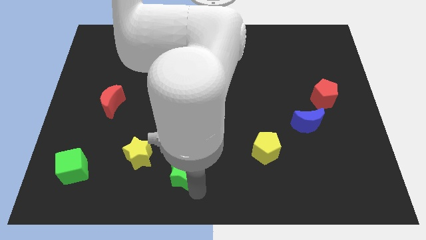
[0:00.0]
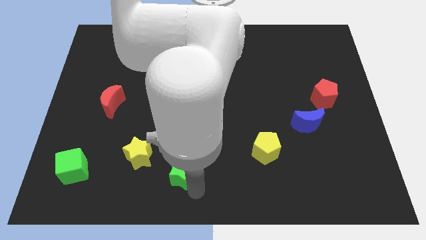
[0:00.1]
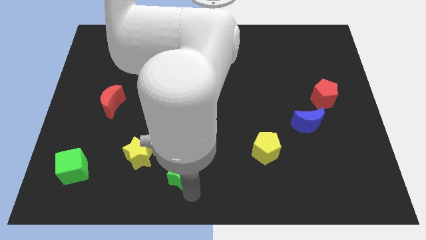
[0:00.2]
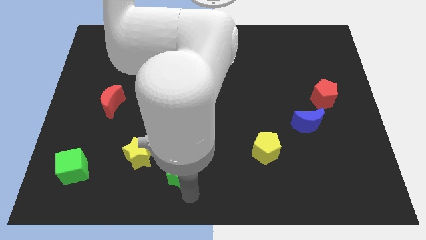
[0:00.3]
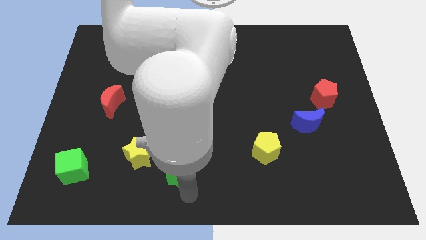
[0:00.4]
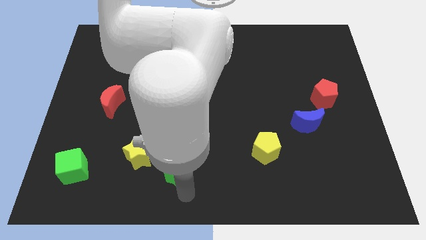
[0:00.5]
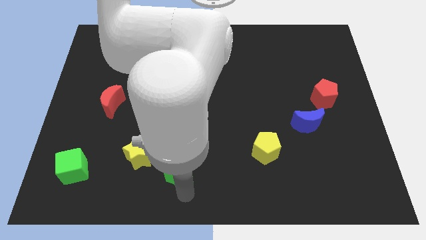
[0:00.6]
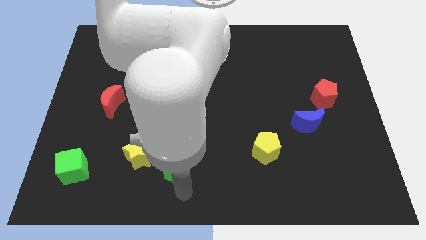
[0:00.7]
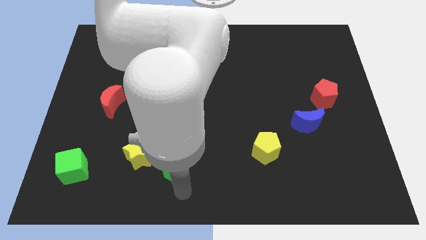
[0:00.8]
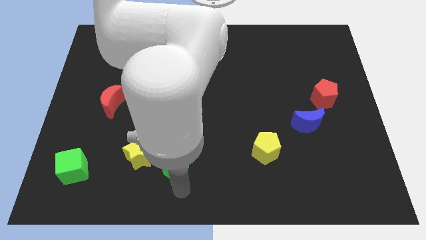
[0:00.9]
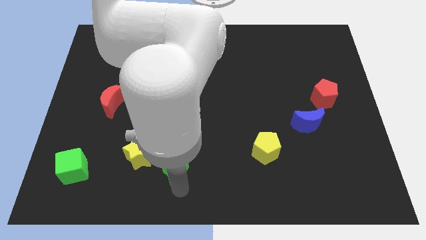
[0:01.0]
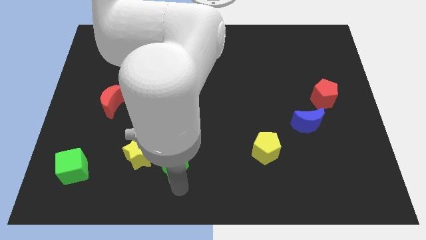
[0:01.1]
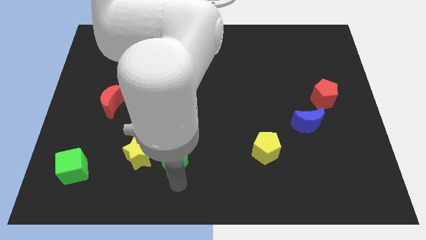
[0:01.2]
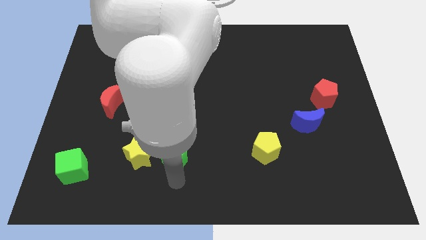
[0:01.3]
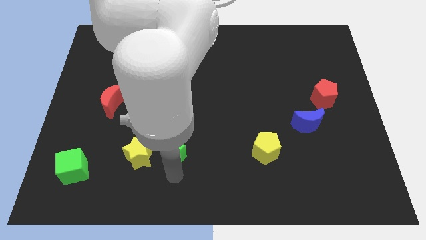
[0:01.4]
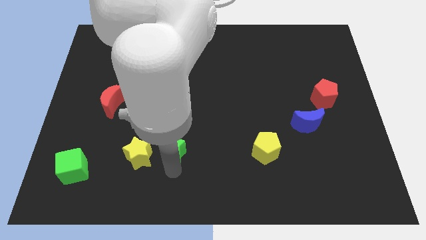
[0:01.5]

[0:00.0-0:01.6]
put the green star horizontal to the yellow star on the right side

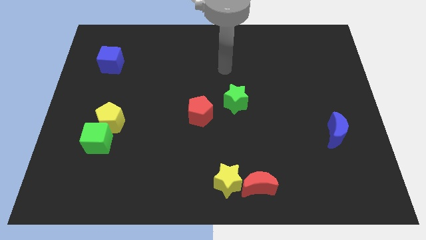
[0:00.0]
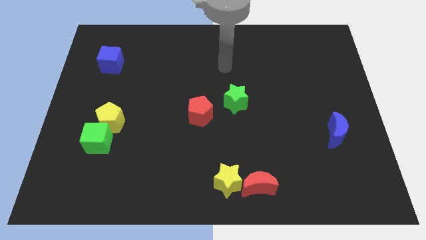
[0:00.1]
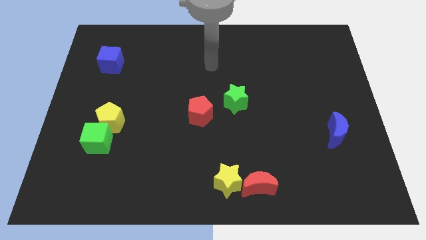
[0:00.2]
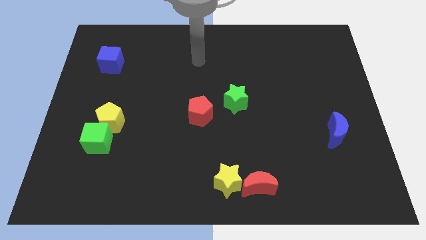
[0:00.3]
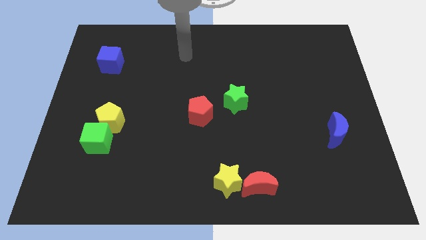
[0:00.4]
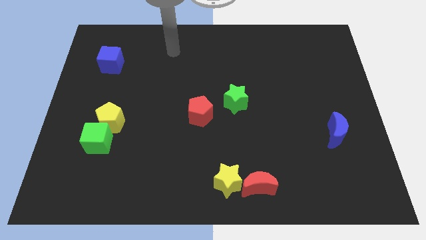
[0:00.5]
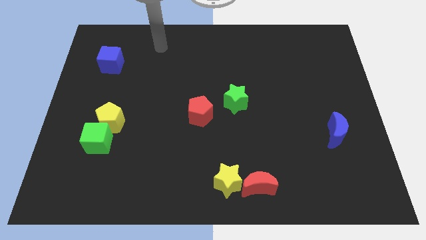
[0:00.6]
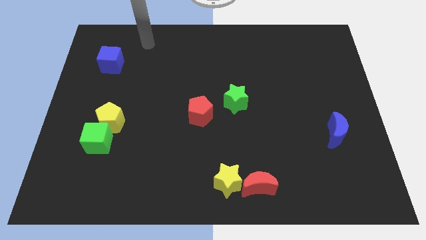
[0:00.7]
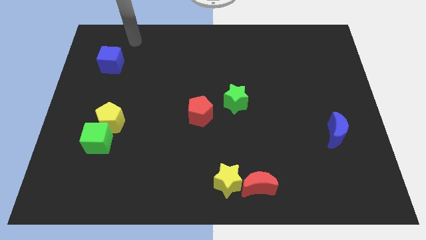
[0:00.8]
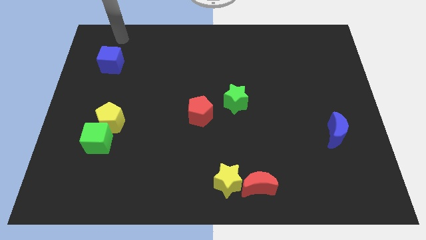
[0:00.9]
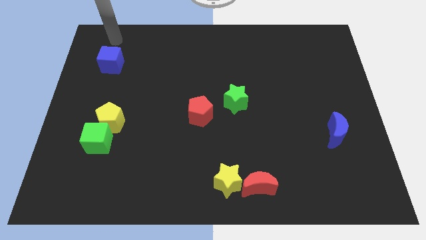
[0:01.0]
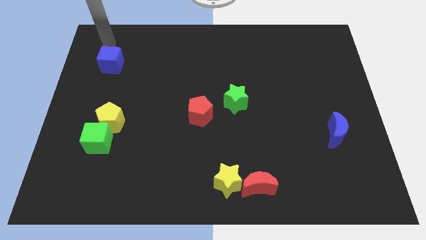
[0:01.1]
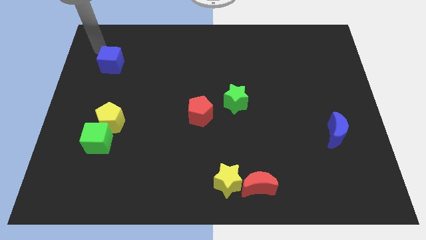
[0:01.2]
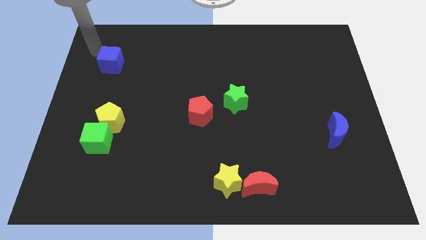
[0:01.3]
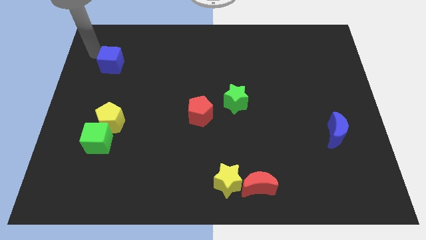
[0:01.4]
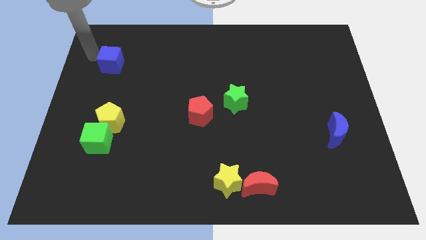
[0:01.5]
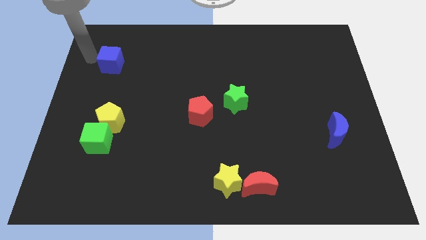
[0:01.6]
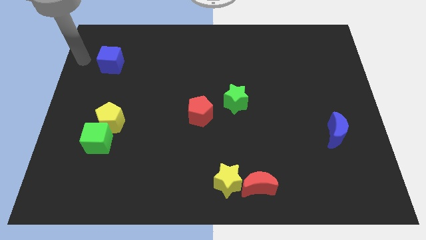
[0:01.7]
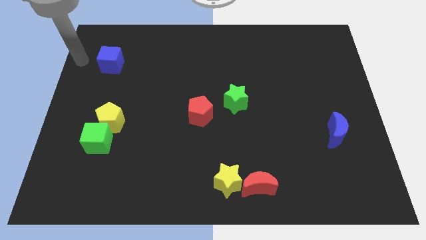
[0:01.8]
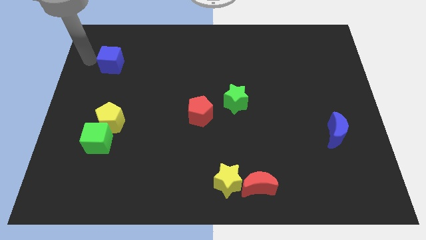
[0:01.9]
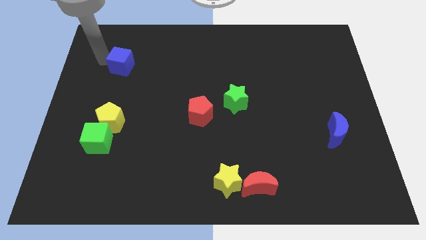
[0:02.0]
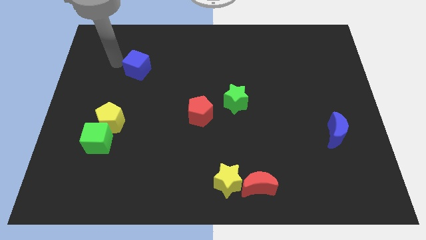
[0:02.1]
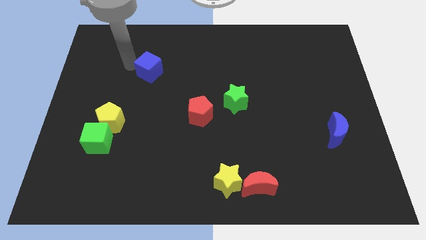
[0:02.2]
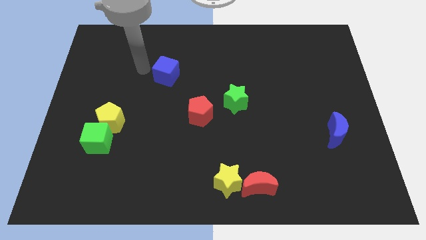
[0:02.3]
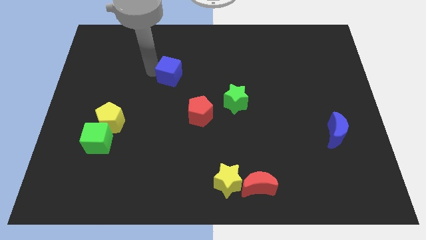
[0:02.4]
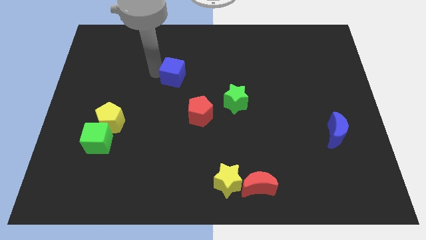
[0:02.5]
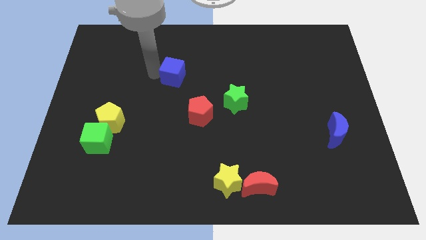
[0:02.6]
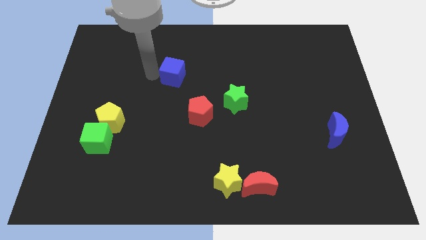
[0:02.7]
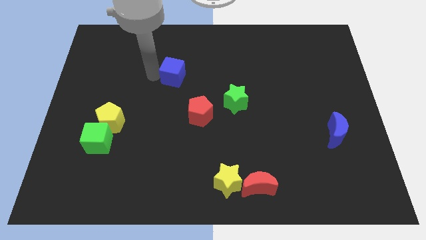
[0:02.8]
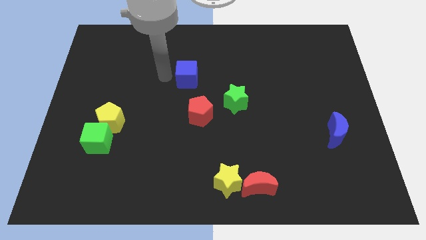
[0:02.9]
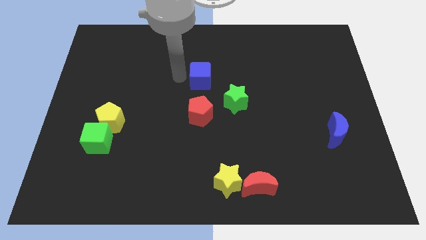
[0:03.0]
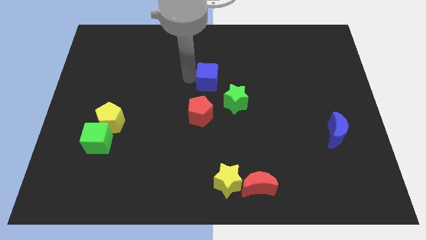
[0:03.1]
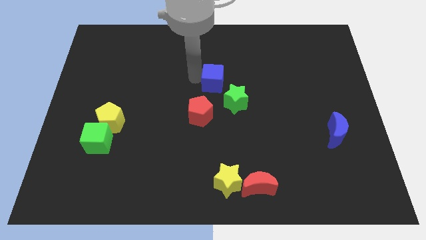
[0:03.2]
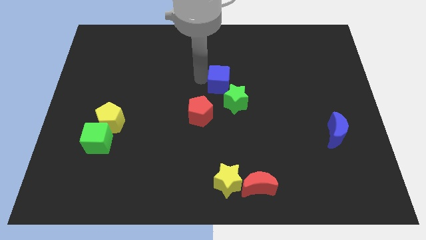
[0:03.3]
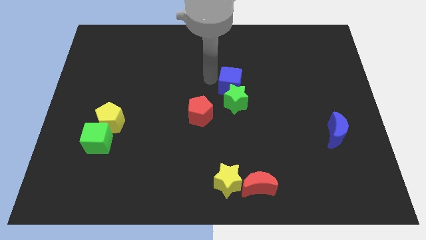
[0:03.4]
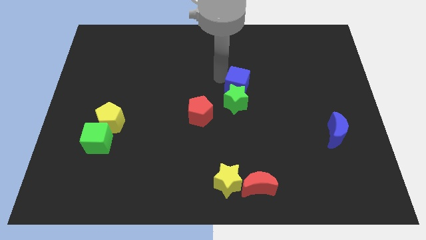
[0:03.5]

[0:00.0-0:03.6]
place blue cube above green star

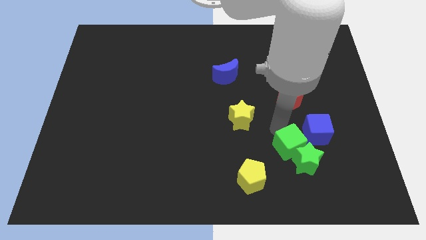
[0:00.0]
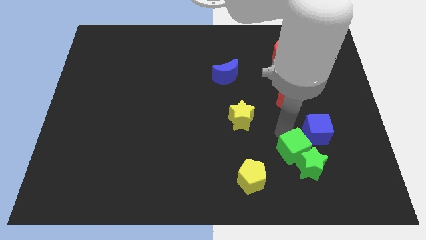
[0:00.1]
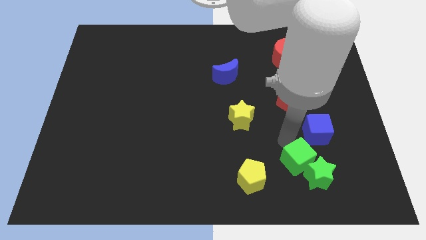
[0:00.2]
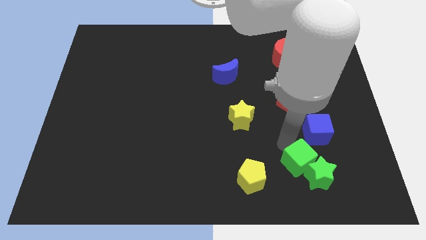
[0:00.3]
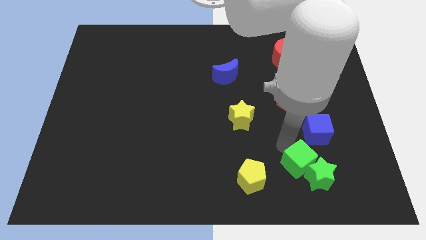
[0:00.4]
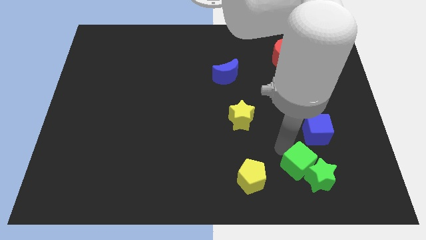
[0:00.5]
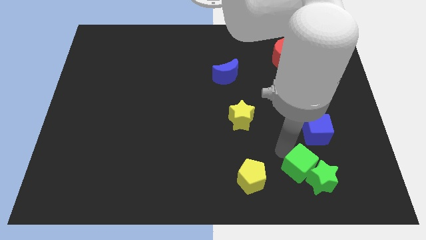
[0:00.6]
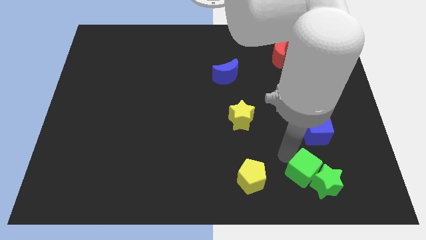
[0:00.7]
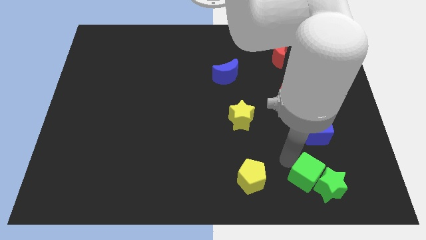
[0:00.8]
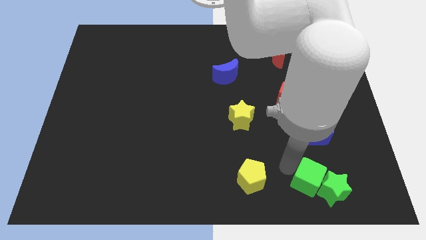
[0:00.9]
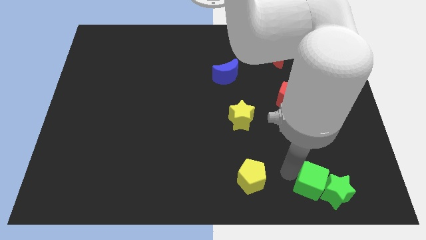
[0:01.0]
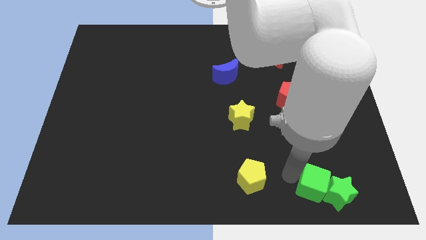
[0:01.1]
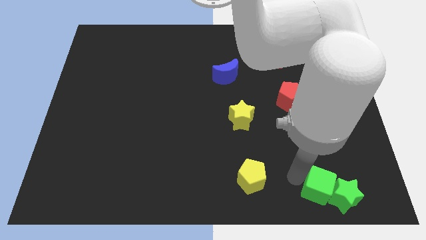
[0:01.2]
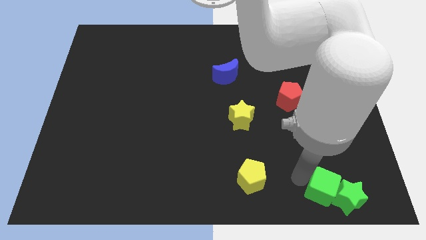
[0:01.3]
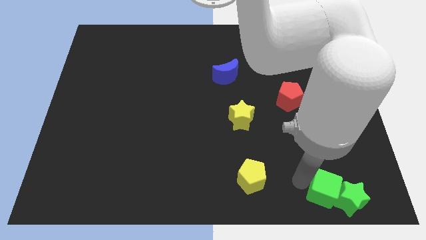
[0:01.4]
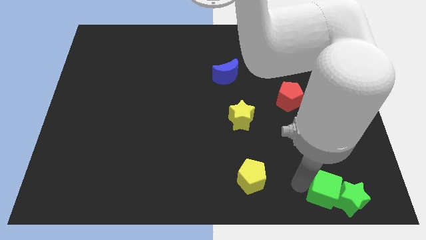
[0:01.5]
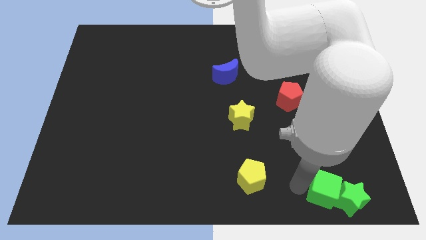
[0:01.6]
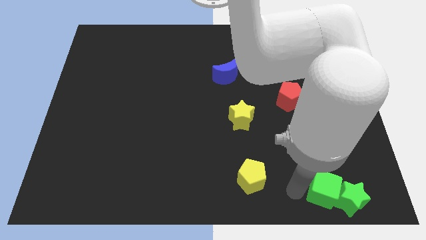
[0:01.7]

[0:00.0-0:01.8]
place green cube to the bottom of blue cube

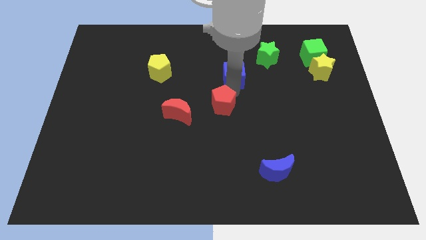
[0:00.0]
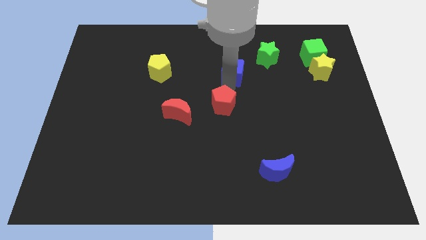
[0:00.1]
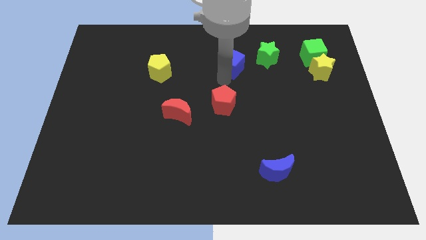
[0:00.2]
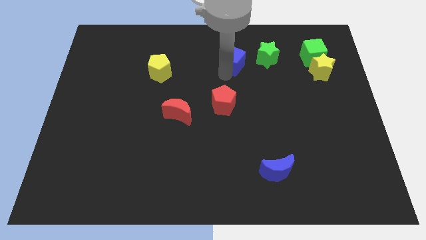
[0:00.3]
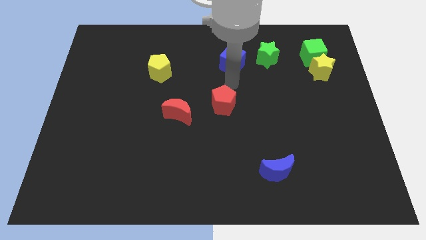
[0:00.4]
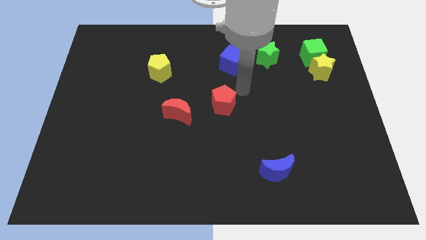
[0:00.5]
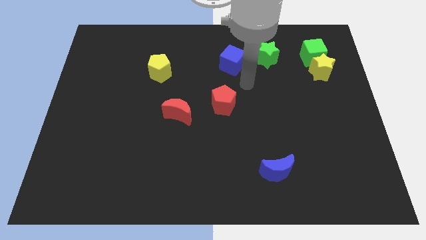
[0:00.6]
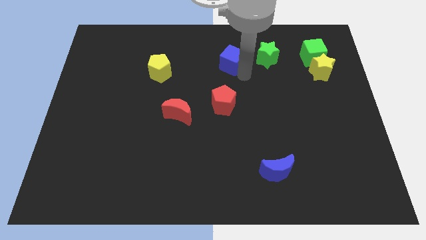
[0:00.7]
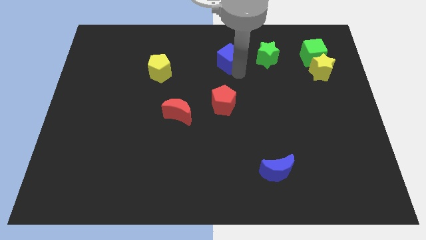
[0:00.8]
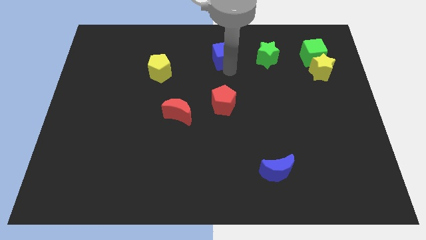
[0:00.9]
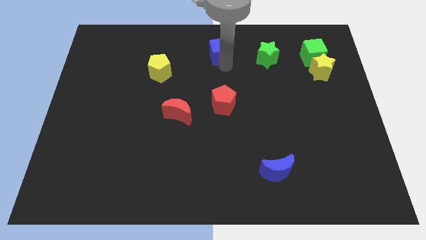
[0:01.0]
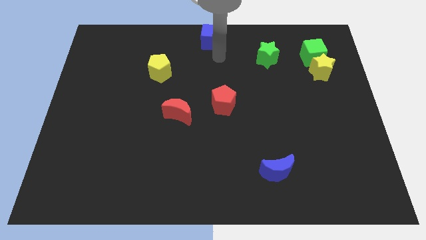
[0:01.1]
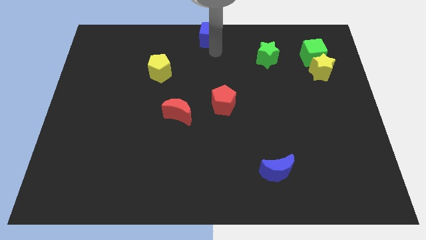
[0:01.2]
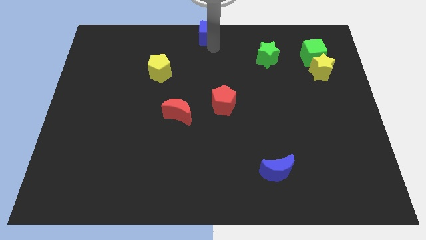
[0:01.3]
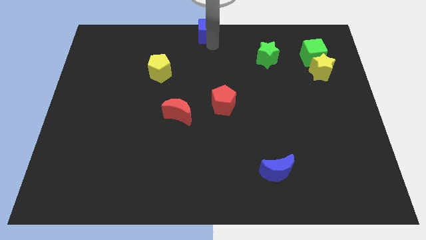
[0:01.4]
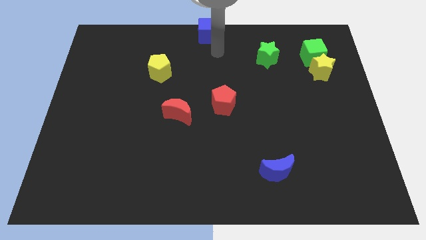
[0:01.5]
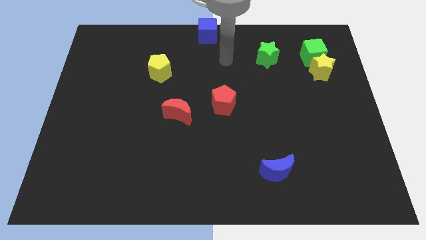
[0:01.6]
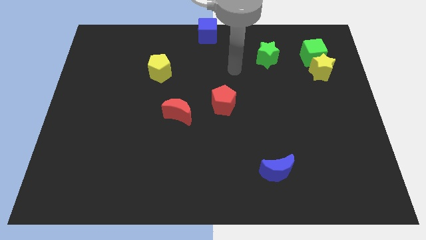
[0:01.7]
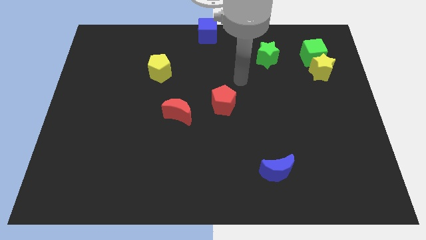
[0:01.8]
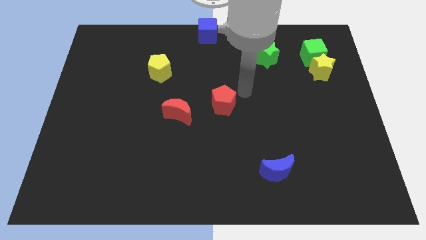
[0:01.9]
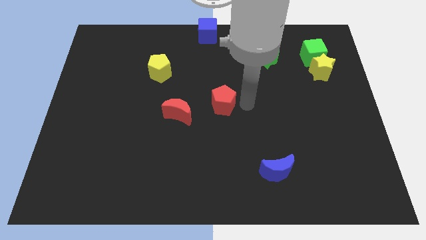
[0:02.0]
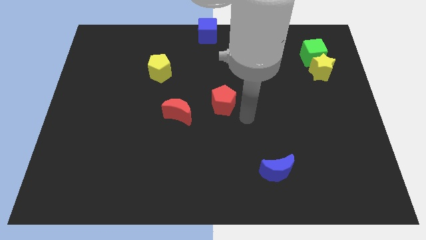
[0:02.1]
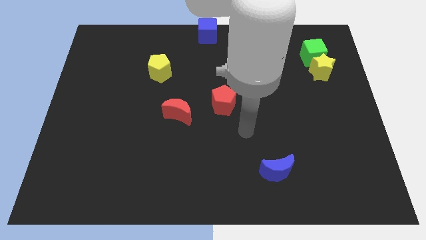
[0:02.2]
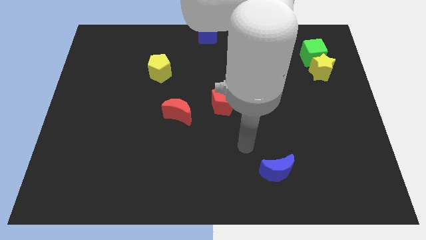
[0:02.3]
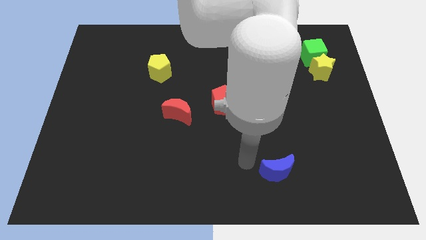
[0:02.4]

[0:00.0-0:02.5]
move the blue cube to the top center of the board
